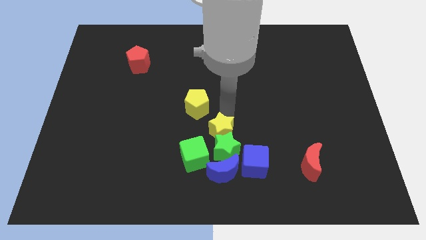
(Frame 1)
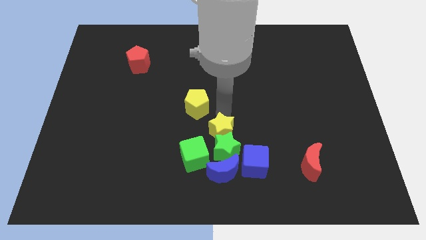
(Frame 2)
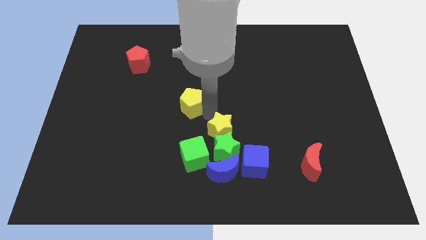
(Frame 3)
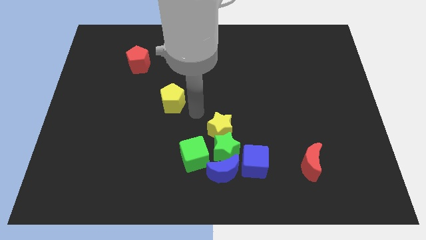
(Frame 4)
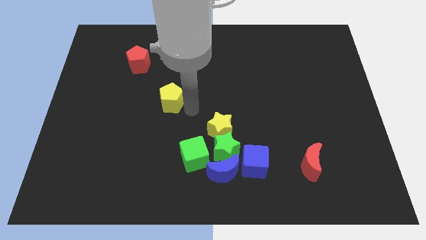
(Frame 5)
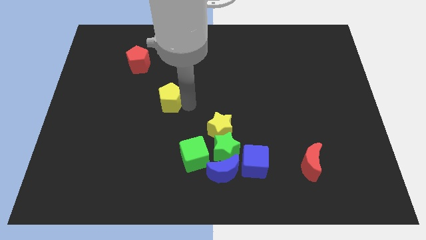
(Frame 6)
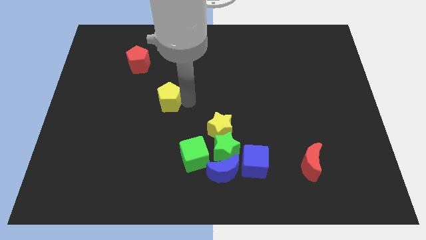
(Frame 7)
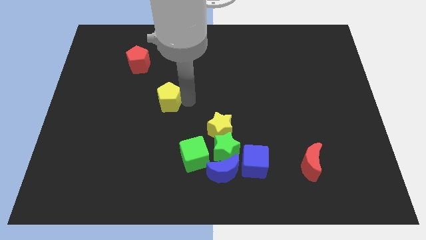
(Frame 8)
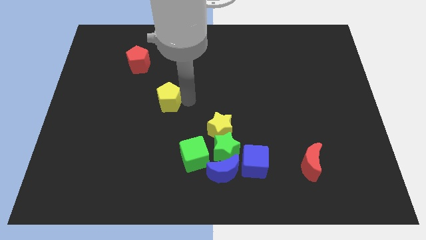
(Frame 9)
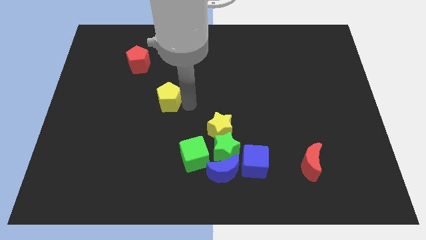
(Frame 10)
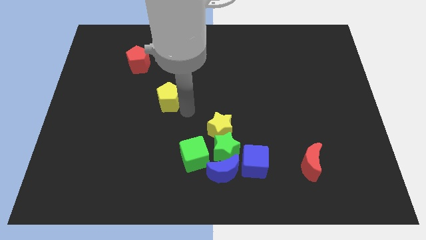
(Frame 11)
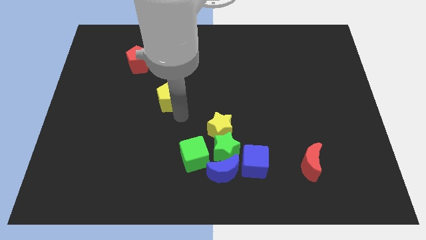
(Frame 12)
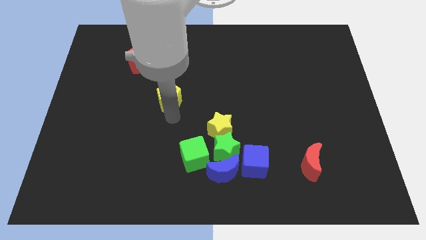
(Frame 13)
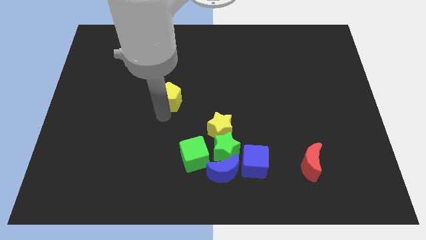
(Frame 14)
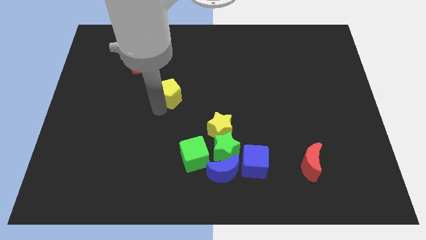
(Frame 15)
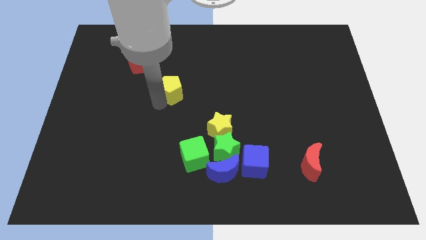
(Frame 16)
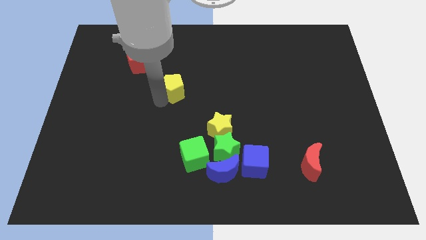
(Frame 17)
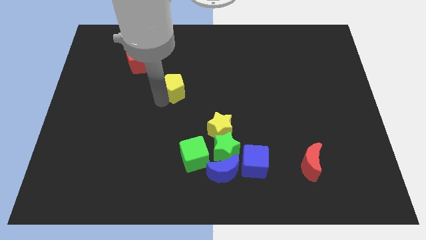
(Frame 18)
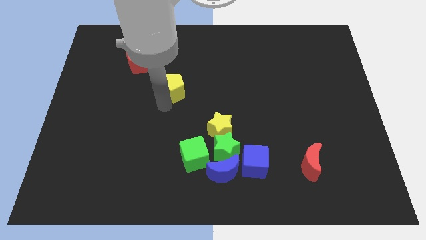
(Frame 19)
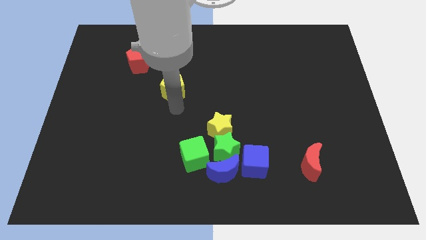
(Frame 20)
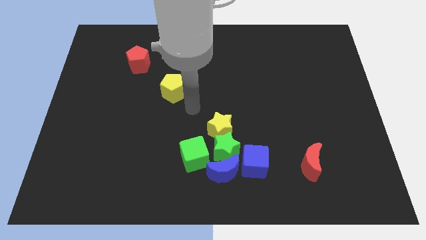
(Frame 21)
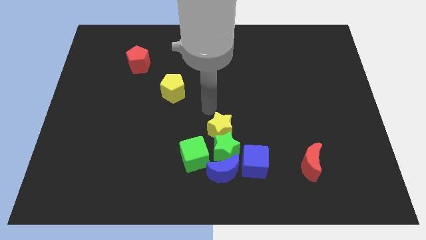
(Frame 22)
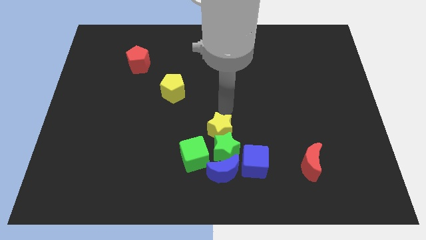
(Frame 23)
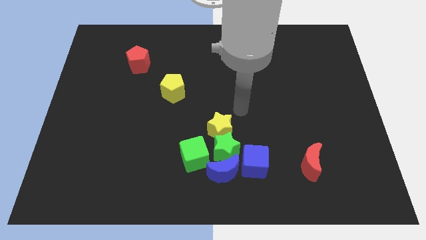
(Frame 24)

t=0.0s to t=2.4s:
slide yellow pentagon towards red pentagon

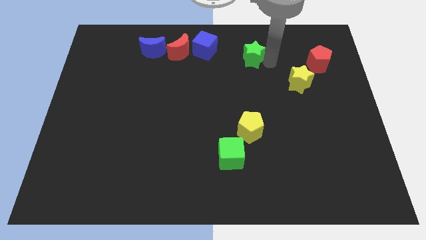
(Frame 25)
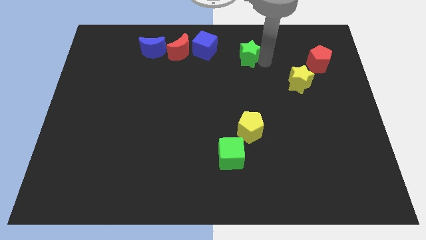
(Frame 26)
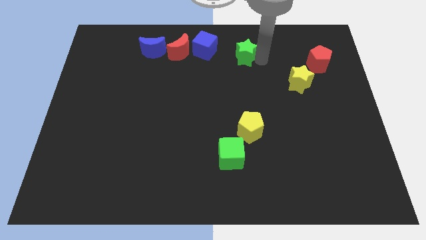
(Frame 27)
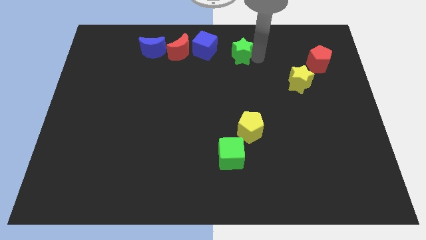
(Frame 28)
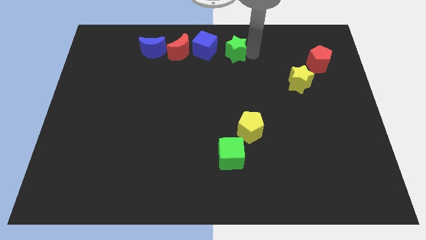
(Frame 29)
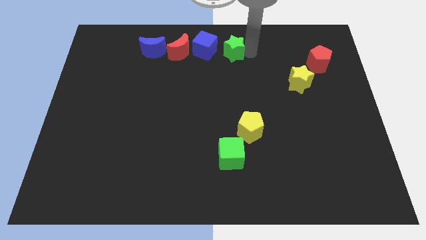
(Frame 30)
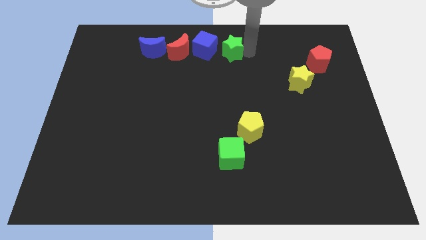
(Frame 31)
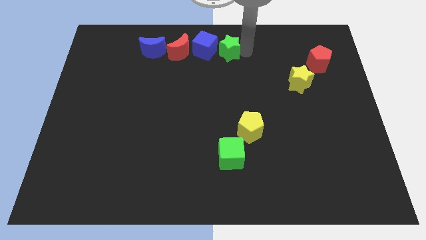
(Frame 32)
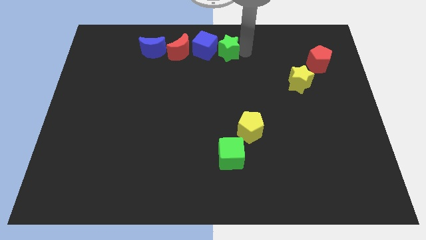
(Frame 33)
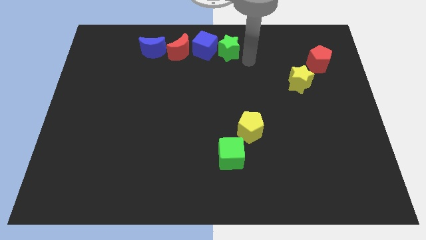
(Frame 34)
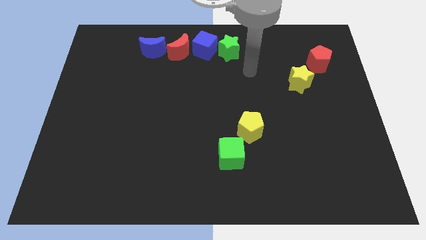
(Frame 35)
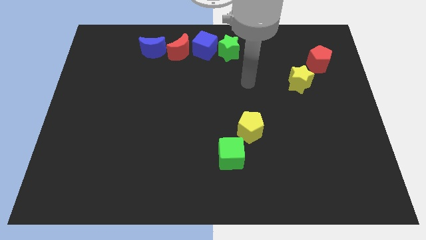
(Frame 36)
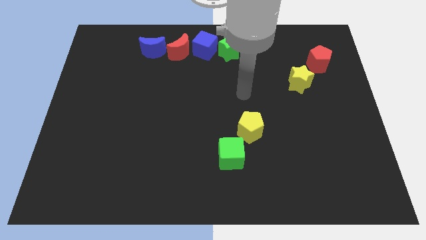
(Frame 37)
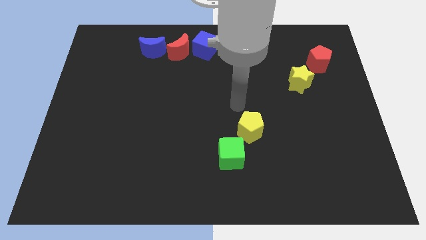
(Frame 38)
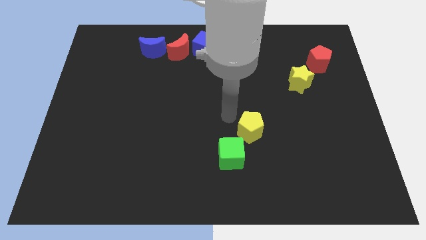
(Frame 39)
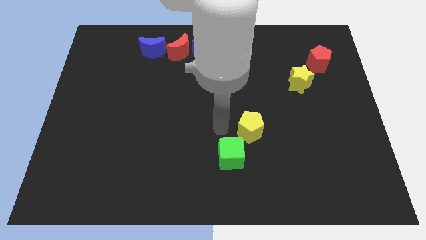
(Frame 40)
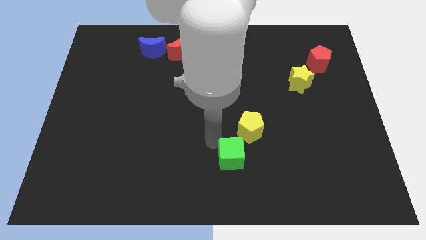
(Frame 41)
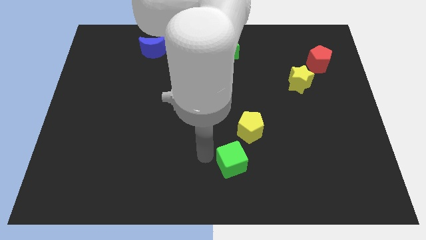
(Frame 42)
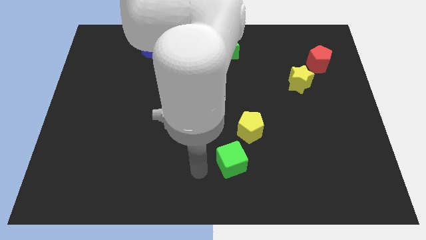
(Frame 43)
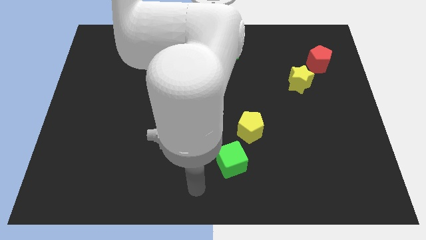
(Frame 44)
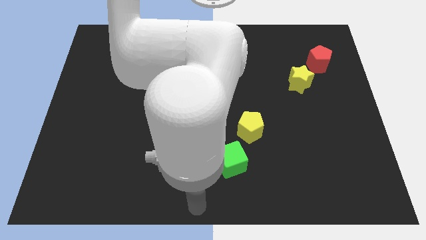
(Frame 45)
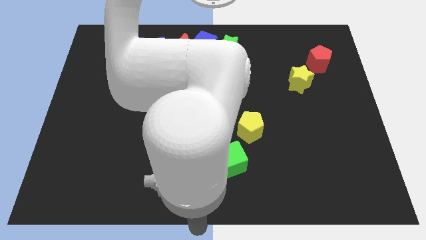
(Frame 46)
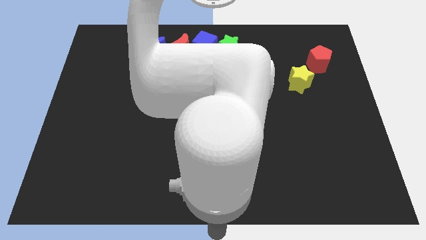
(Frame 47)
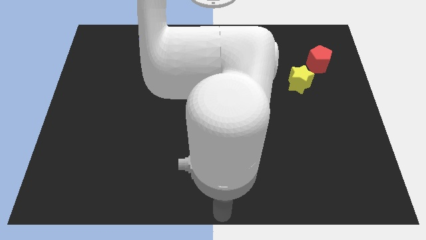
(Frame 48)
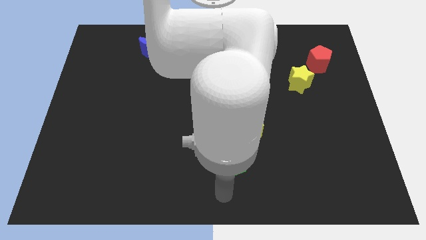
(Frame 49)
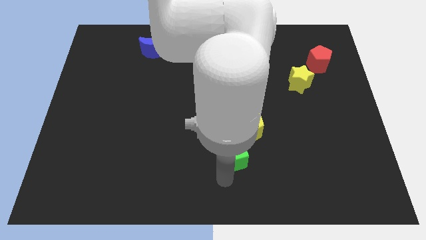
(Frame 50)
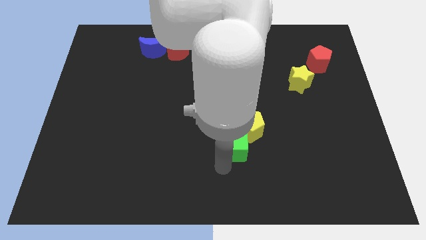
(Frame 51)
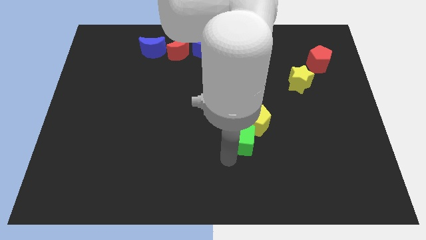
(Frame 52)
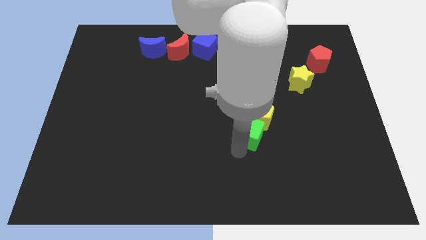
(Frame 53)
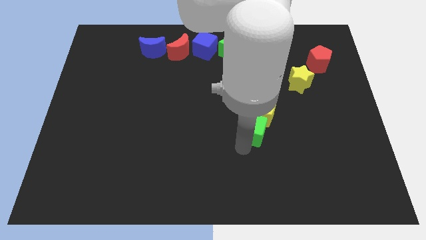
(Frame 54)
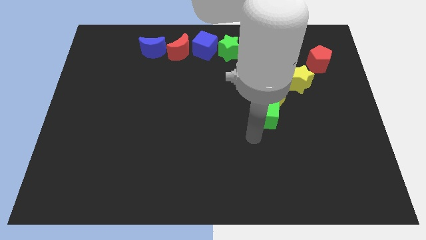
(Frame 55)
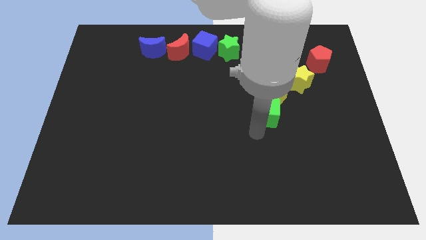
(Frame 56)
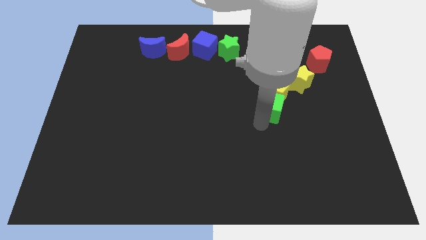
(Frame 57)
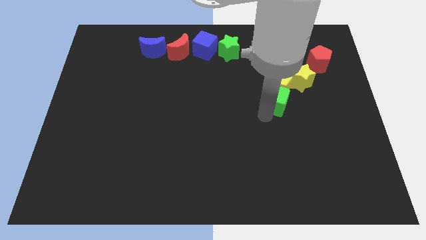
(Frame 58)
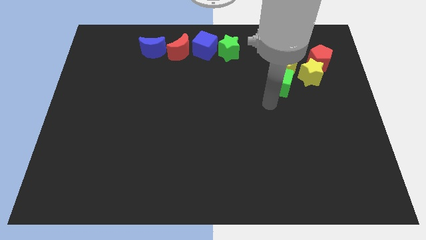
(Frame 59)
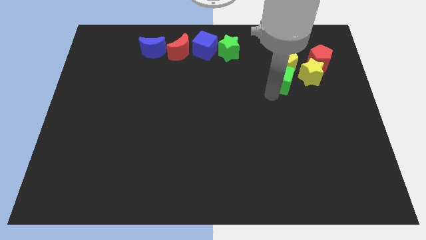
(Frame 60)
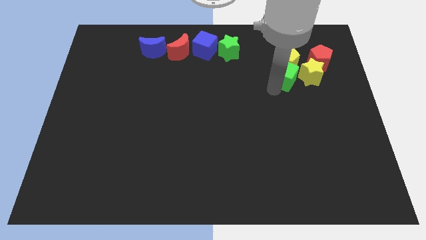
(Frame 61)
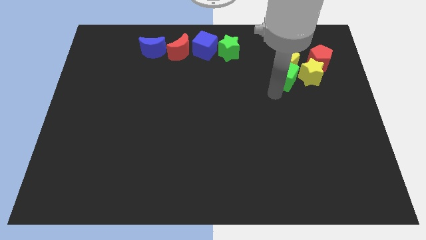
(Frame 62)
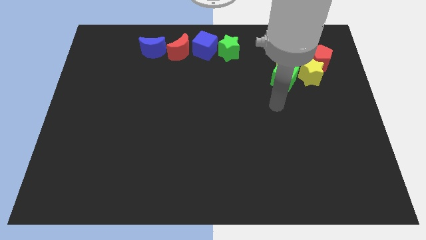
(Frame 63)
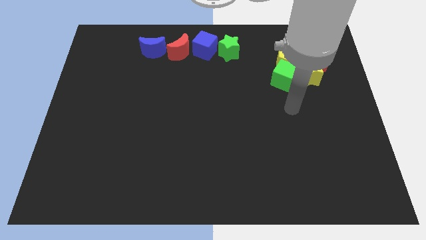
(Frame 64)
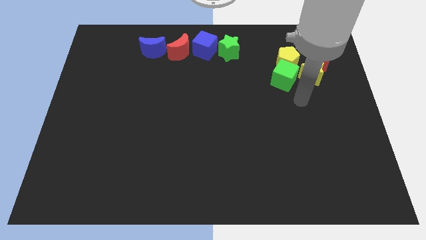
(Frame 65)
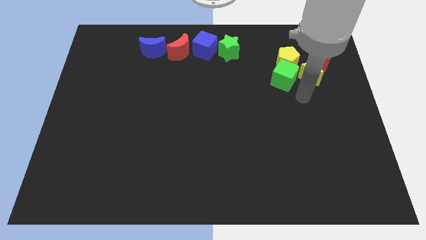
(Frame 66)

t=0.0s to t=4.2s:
move green cube along with yellow pentagon to the top right

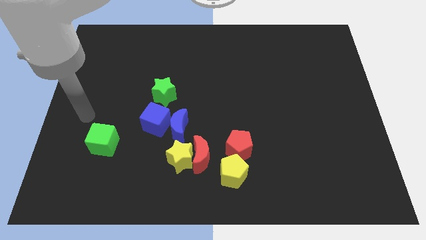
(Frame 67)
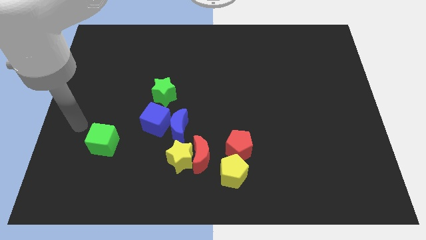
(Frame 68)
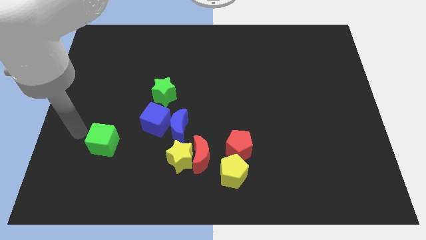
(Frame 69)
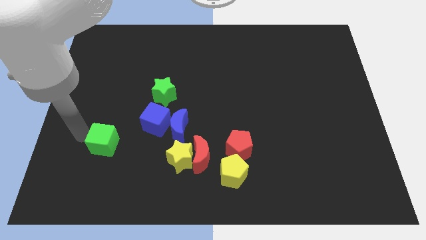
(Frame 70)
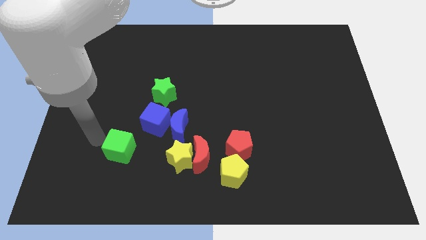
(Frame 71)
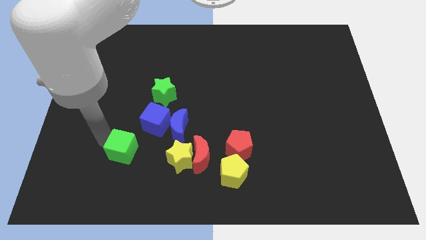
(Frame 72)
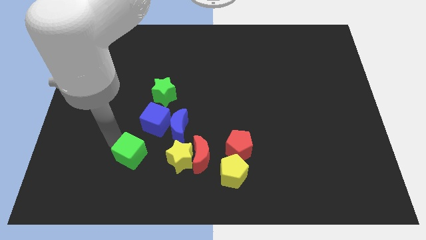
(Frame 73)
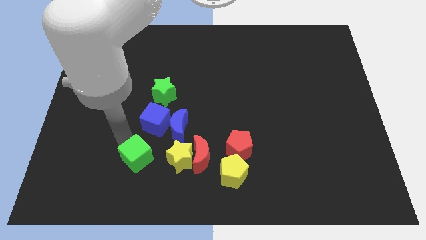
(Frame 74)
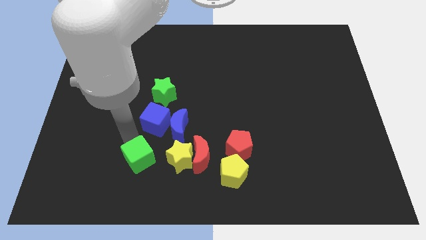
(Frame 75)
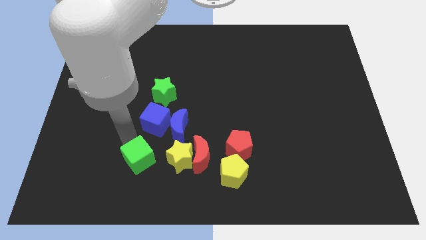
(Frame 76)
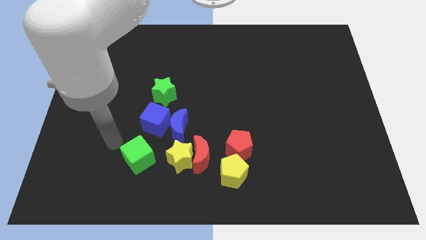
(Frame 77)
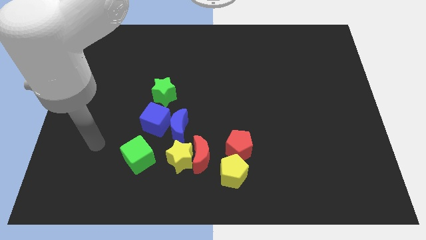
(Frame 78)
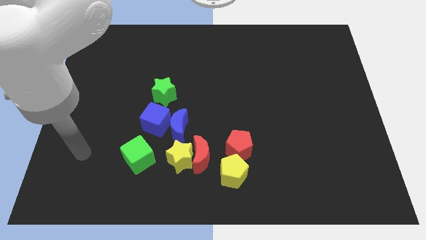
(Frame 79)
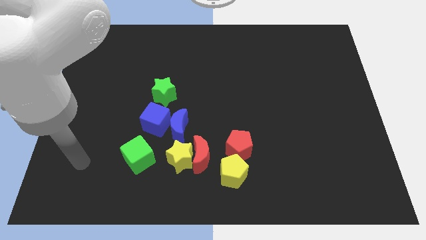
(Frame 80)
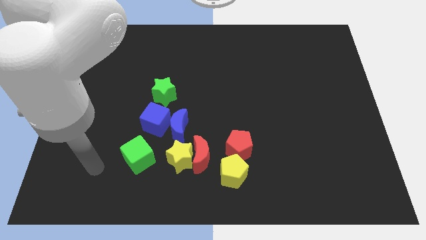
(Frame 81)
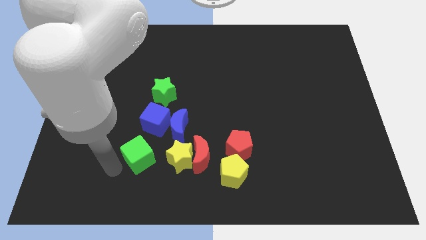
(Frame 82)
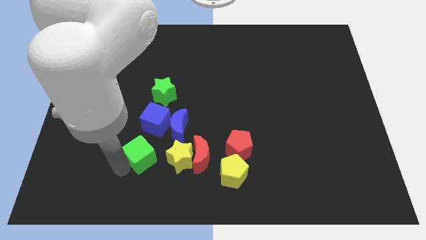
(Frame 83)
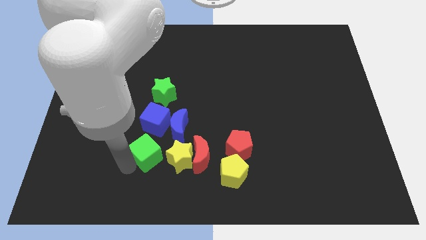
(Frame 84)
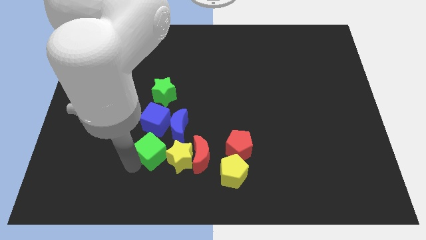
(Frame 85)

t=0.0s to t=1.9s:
place the green cube below the blue cube

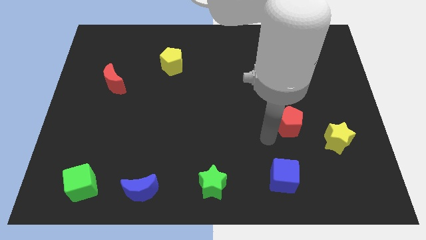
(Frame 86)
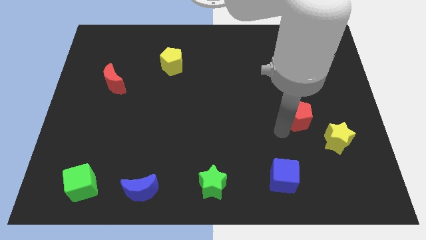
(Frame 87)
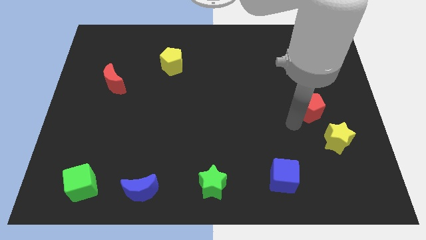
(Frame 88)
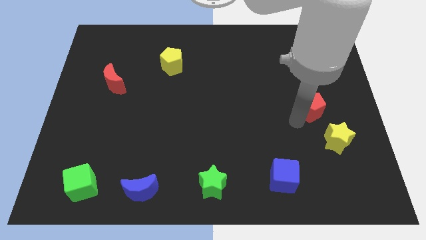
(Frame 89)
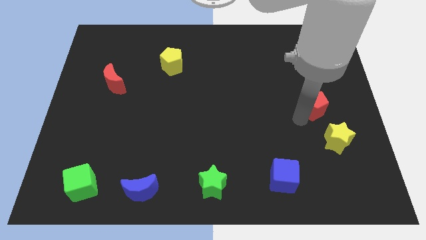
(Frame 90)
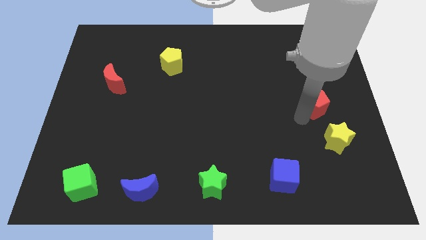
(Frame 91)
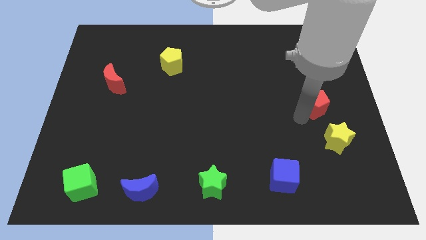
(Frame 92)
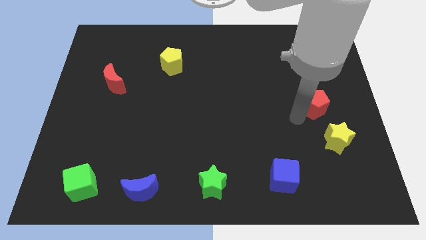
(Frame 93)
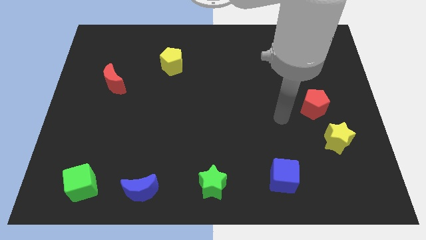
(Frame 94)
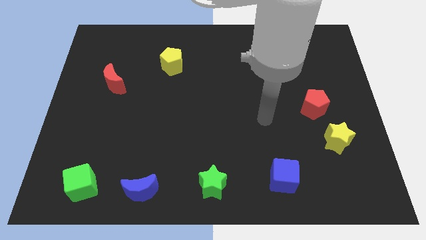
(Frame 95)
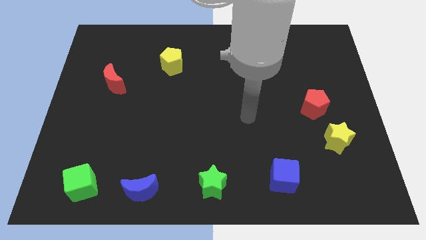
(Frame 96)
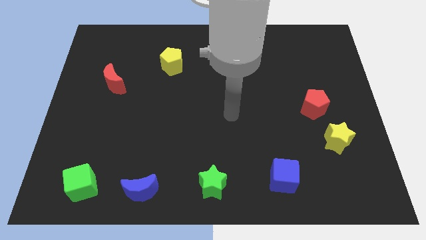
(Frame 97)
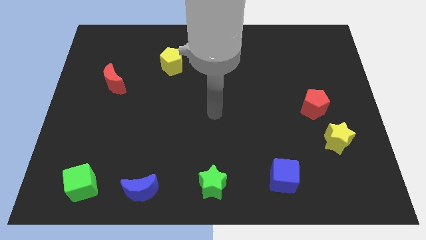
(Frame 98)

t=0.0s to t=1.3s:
place the red pentagon above the yellow star
